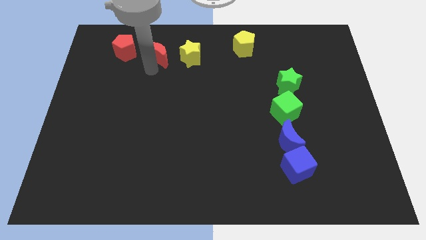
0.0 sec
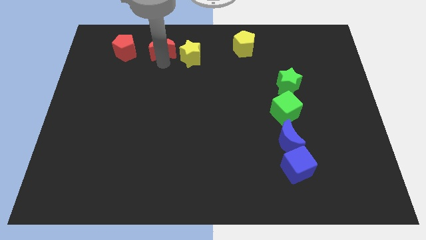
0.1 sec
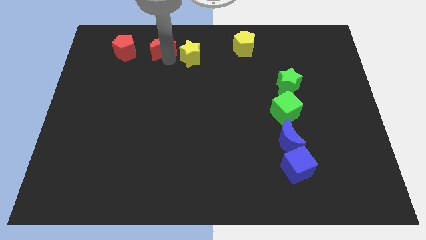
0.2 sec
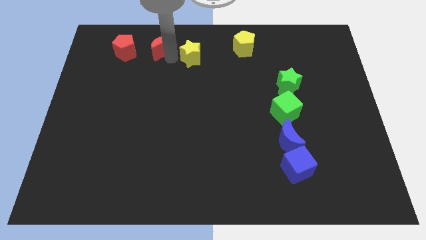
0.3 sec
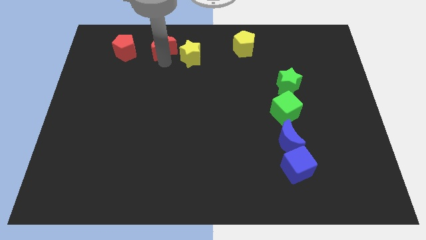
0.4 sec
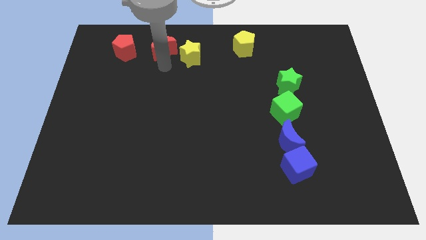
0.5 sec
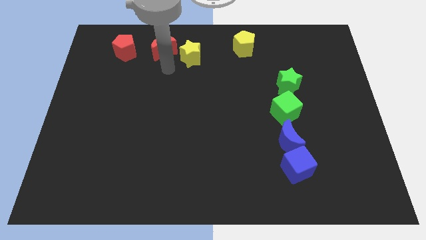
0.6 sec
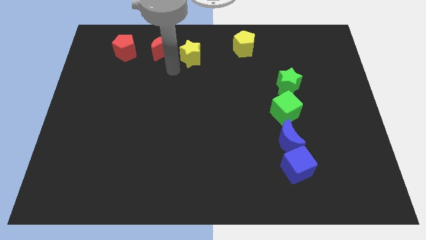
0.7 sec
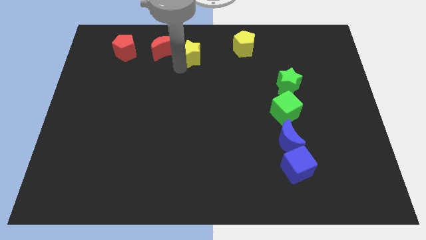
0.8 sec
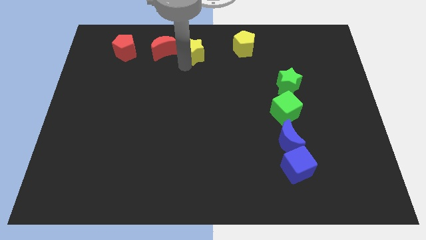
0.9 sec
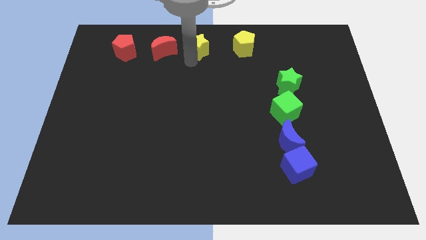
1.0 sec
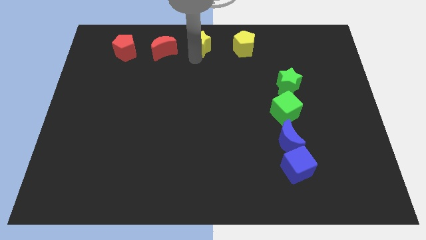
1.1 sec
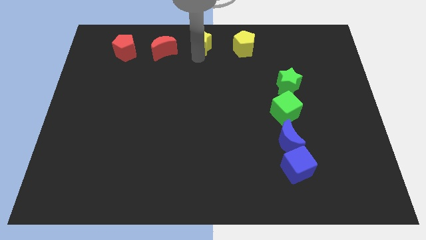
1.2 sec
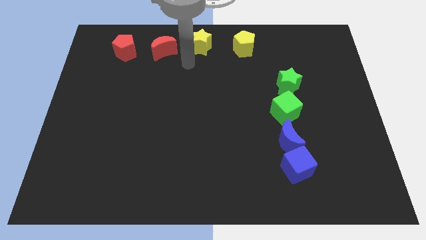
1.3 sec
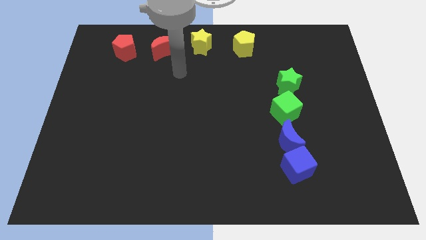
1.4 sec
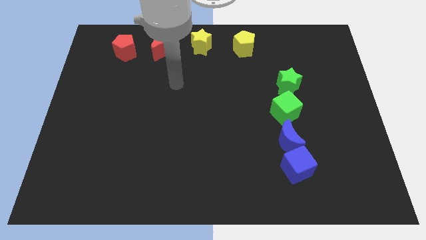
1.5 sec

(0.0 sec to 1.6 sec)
push the red crescent and yellow star slightly to top

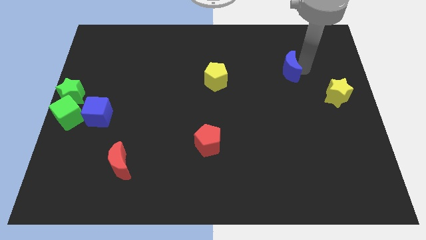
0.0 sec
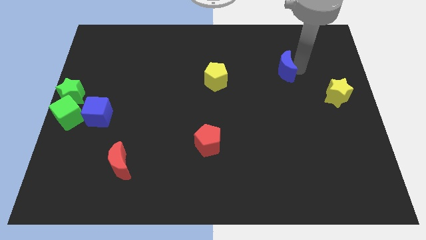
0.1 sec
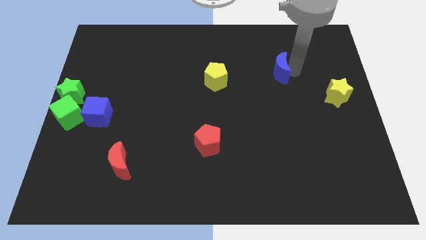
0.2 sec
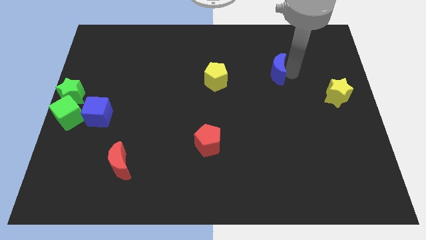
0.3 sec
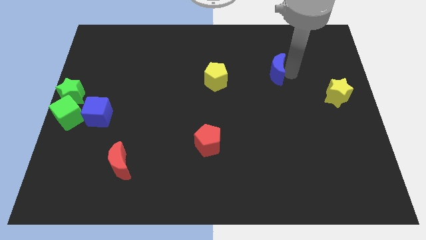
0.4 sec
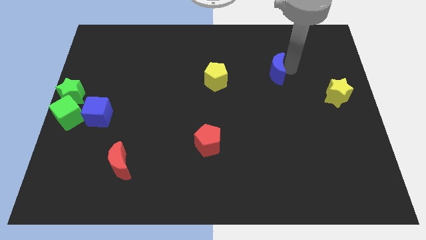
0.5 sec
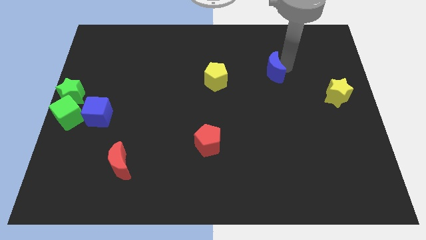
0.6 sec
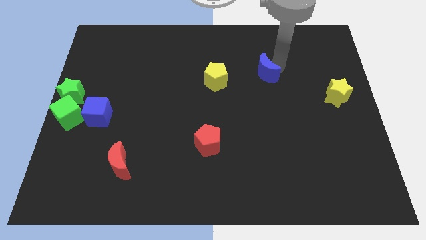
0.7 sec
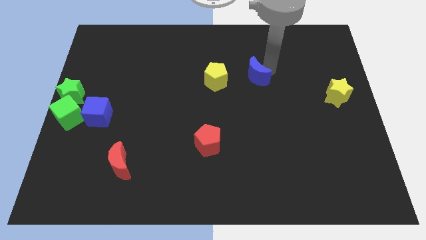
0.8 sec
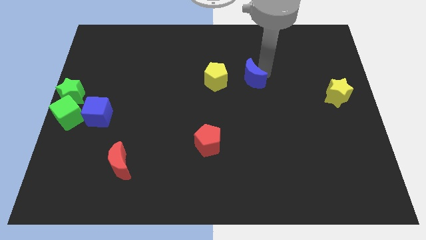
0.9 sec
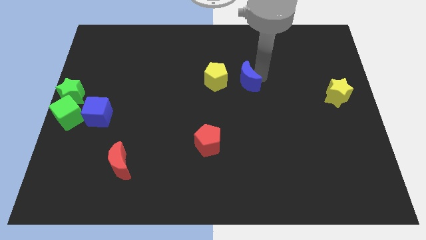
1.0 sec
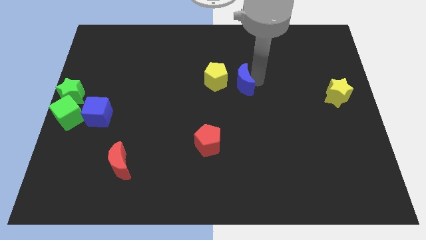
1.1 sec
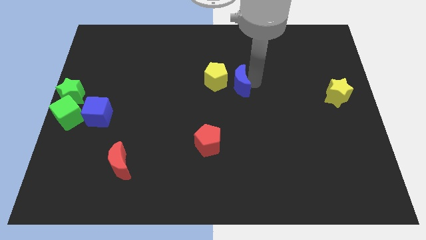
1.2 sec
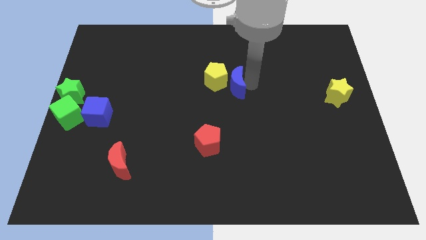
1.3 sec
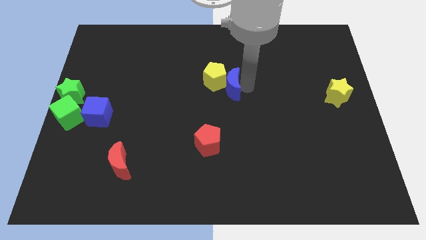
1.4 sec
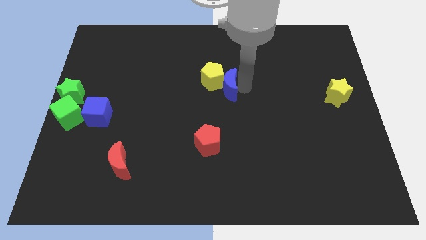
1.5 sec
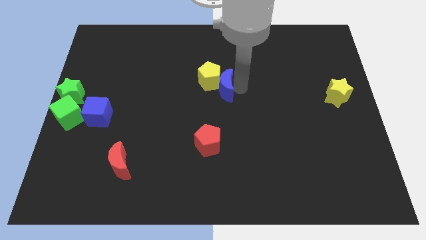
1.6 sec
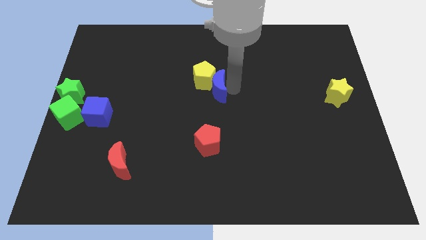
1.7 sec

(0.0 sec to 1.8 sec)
move blue crescent into yellow pentagon

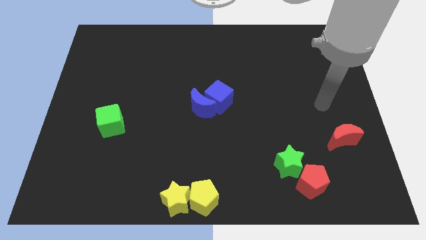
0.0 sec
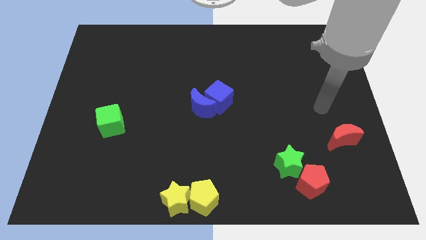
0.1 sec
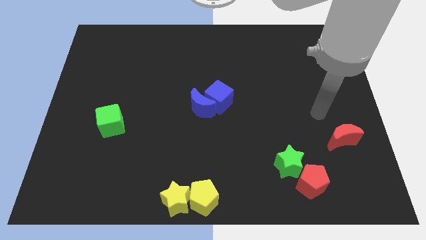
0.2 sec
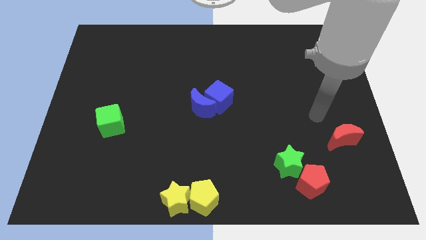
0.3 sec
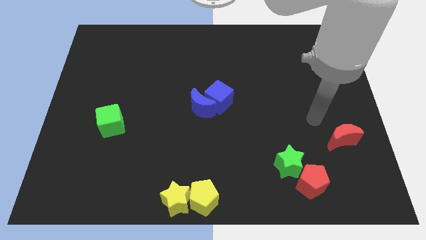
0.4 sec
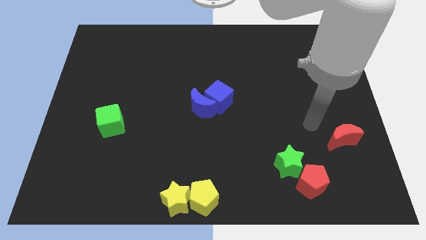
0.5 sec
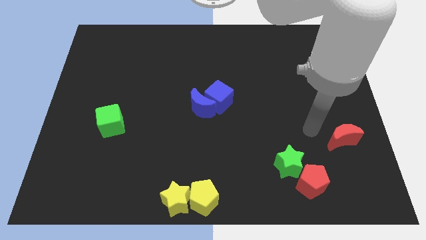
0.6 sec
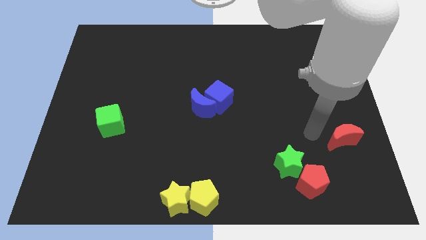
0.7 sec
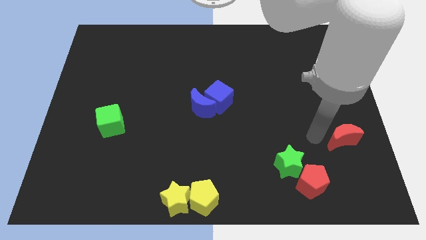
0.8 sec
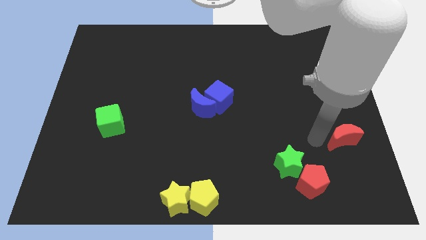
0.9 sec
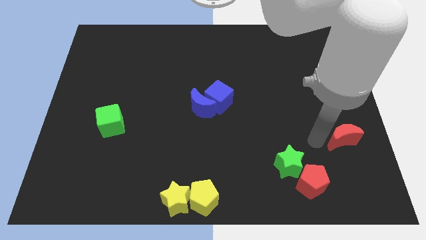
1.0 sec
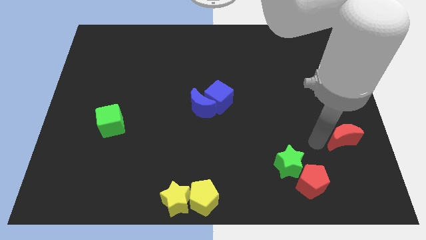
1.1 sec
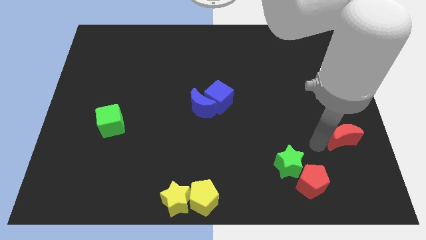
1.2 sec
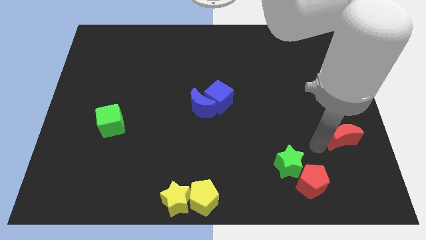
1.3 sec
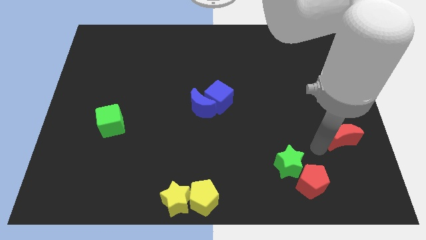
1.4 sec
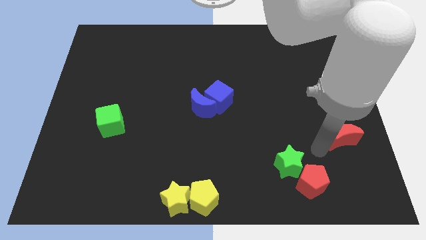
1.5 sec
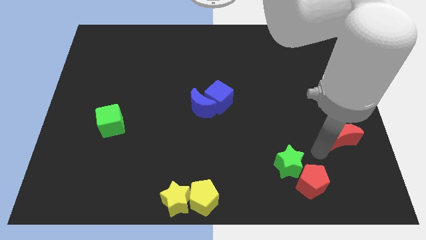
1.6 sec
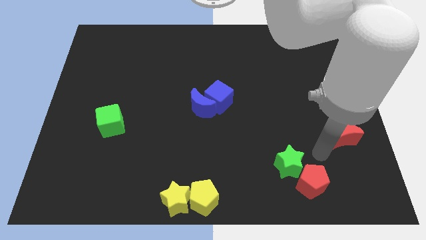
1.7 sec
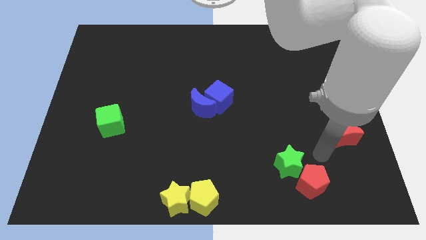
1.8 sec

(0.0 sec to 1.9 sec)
move the arm towards the red pentagon

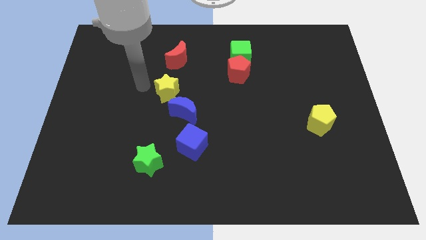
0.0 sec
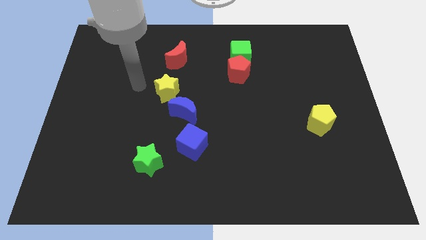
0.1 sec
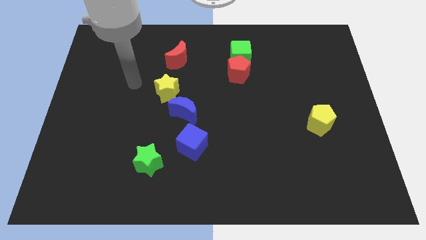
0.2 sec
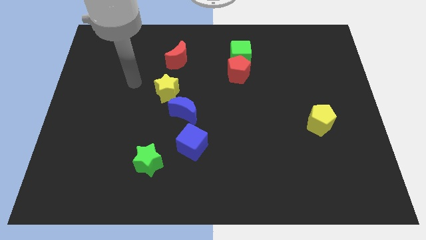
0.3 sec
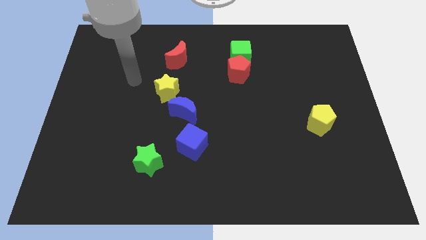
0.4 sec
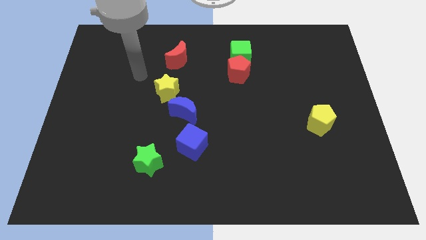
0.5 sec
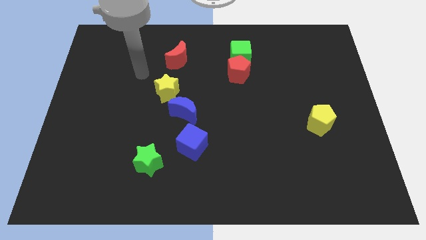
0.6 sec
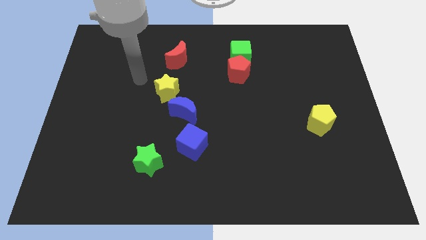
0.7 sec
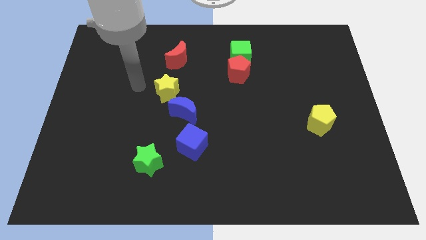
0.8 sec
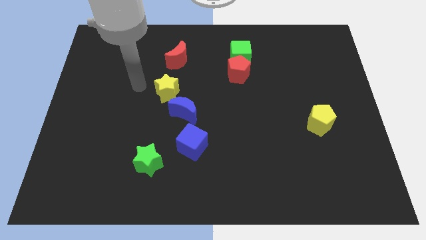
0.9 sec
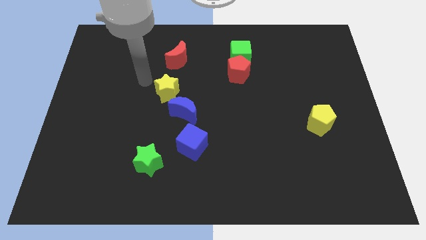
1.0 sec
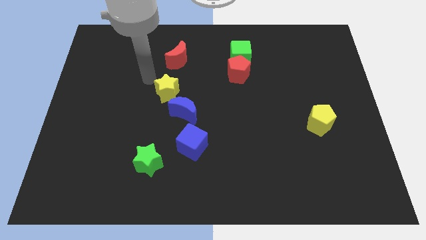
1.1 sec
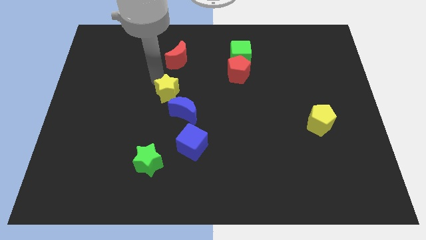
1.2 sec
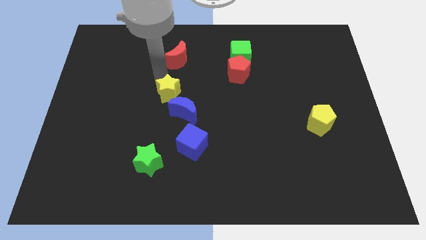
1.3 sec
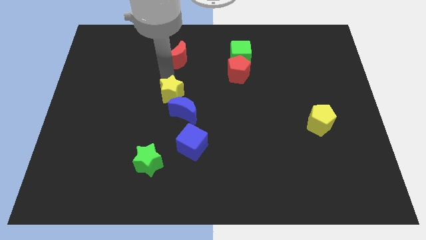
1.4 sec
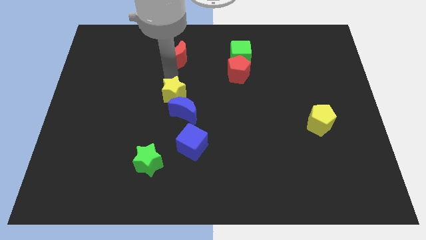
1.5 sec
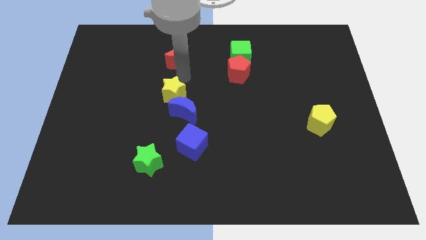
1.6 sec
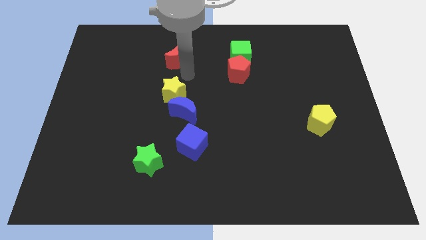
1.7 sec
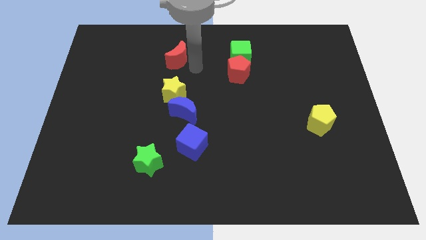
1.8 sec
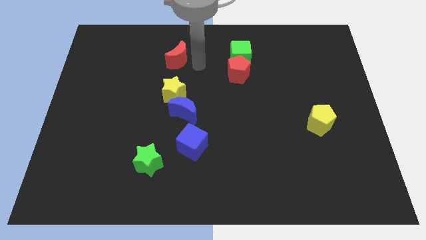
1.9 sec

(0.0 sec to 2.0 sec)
slightly push the yellow star to the top of blue moon

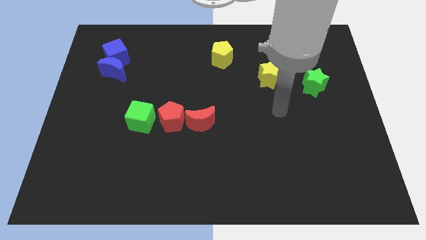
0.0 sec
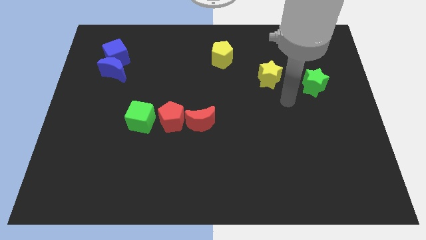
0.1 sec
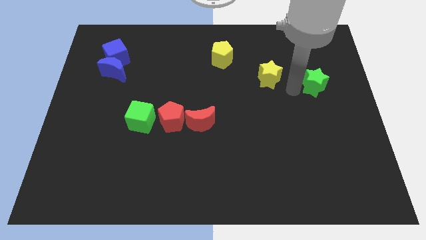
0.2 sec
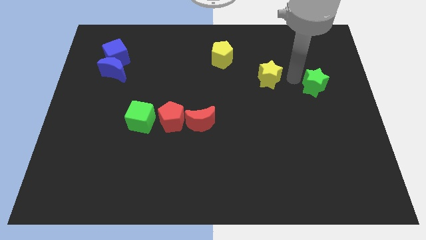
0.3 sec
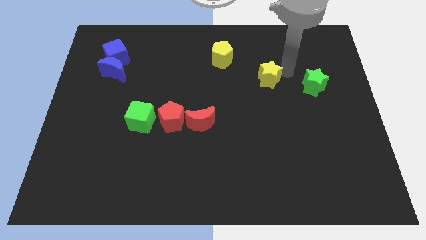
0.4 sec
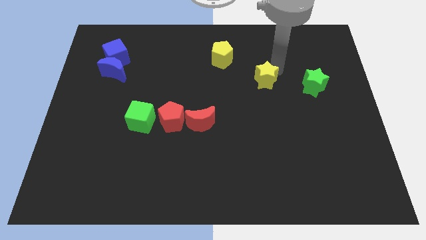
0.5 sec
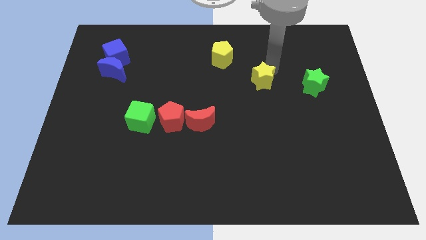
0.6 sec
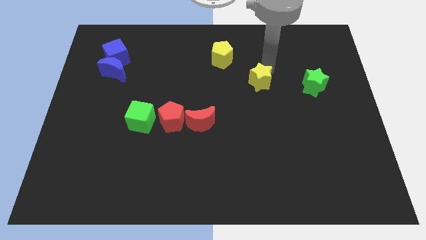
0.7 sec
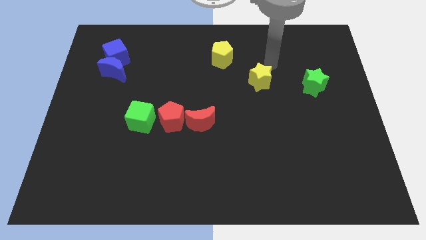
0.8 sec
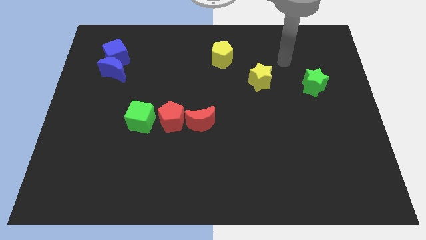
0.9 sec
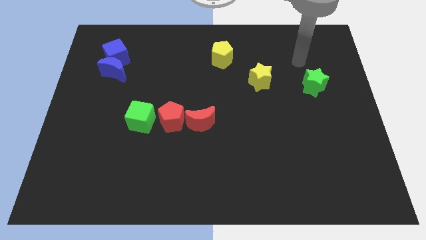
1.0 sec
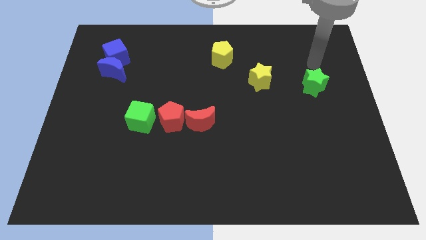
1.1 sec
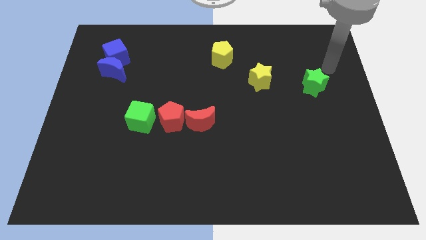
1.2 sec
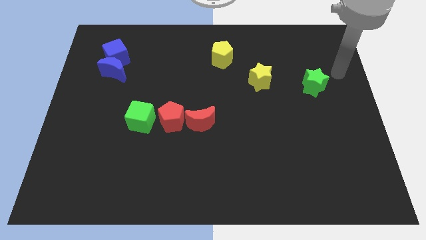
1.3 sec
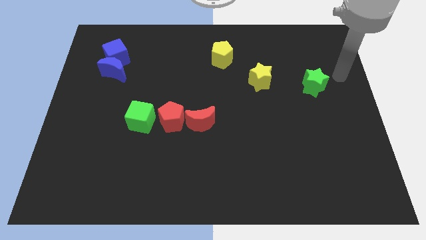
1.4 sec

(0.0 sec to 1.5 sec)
slightly push the yellow star to the left side

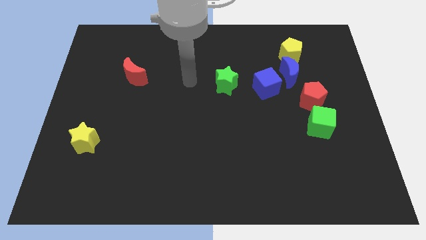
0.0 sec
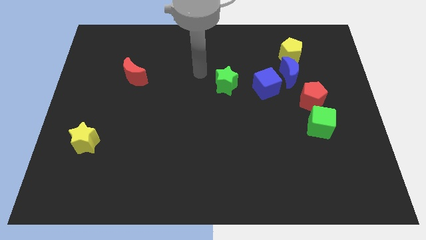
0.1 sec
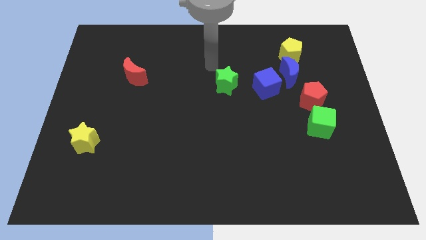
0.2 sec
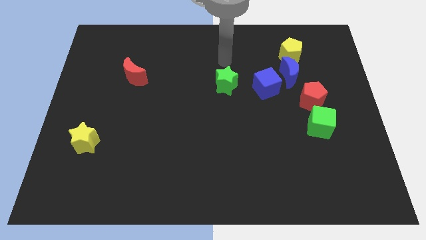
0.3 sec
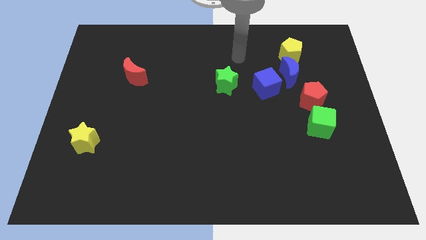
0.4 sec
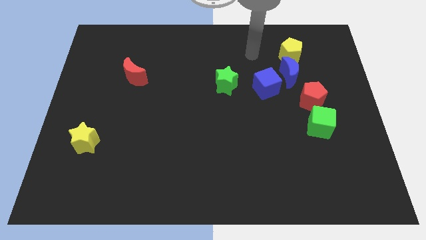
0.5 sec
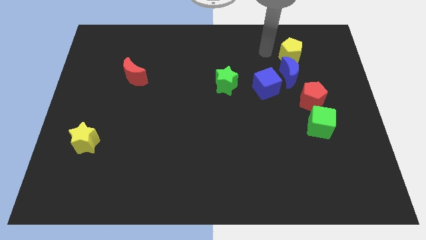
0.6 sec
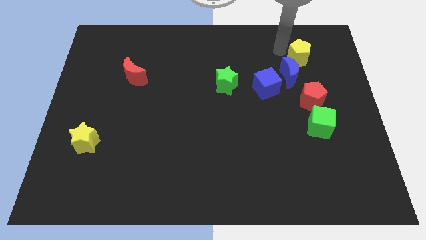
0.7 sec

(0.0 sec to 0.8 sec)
move your arm to the left of yellow pentagon
